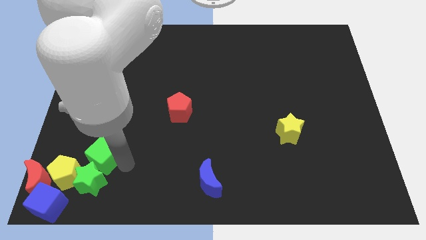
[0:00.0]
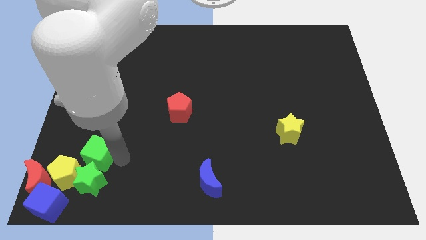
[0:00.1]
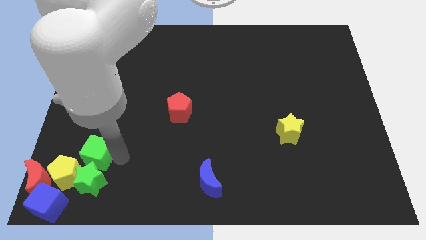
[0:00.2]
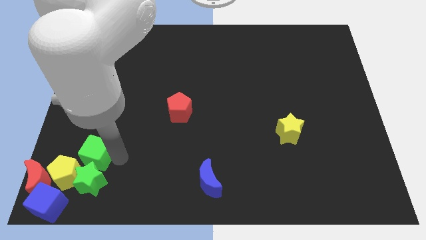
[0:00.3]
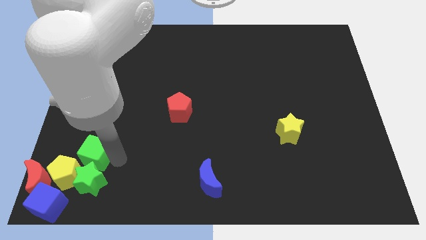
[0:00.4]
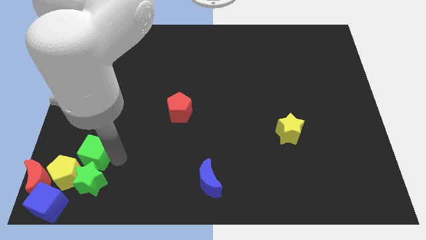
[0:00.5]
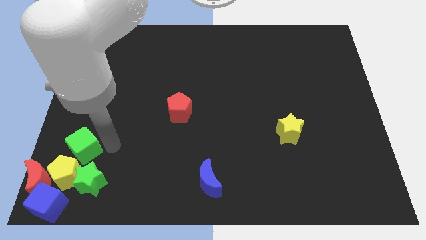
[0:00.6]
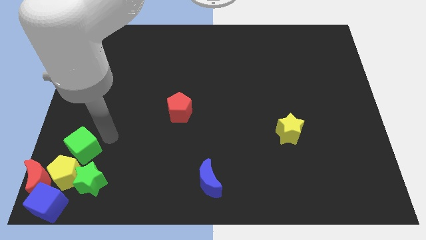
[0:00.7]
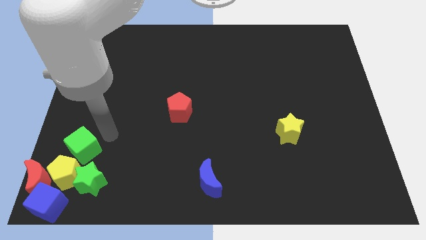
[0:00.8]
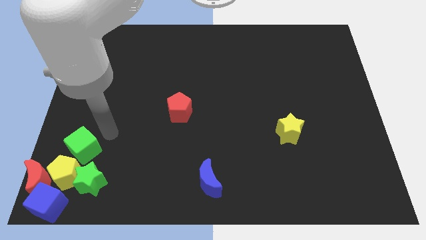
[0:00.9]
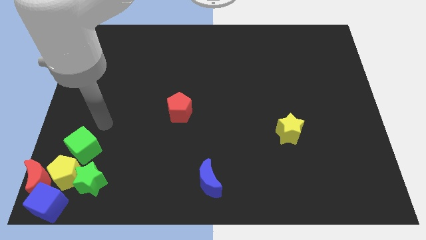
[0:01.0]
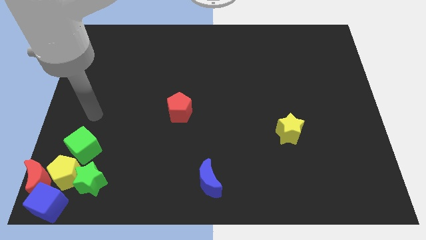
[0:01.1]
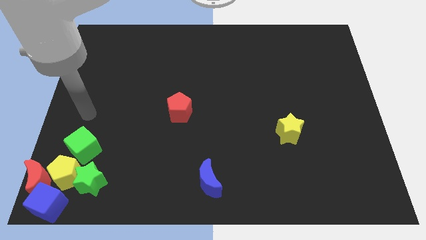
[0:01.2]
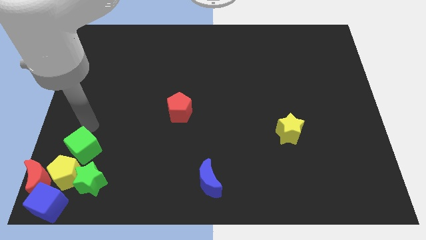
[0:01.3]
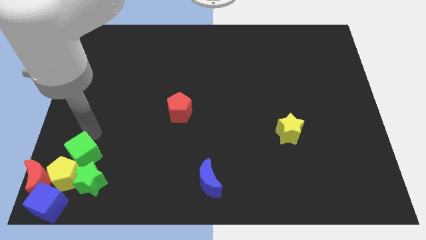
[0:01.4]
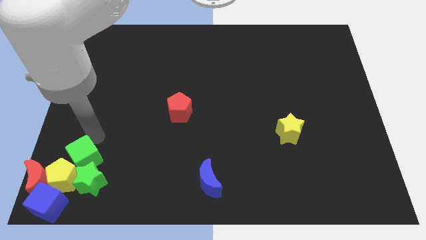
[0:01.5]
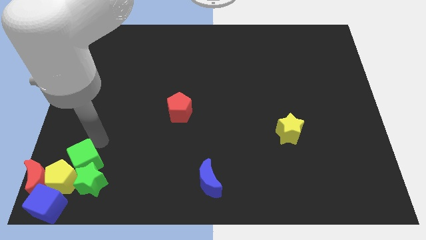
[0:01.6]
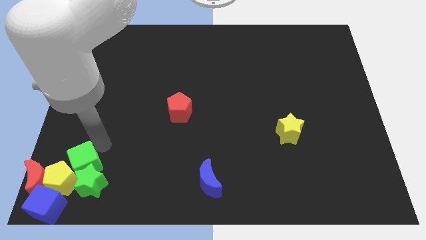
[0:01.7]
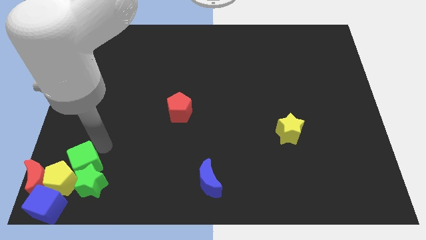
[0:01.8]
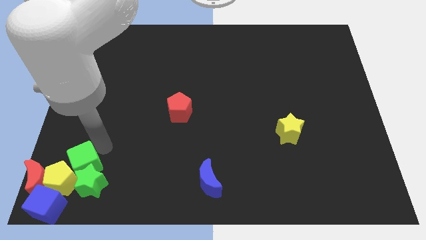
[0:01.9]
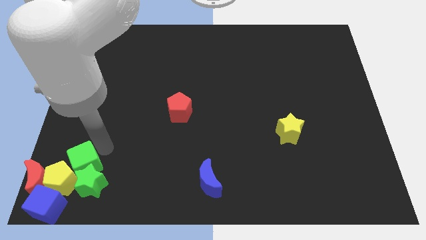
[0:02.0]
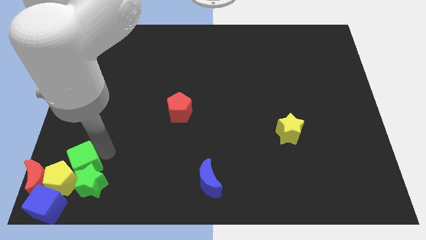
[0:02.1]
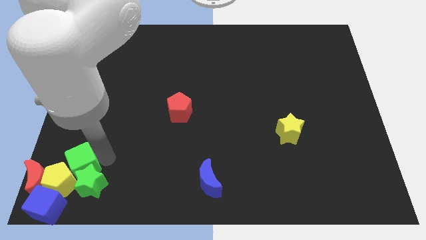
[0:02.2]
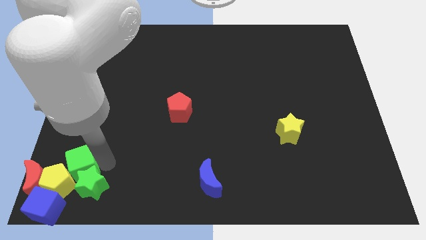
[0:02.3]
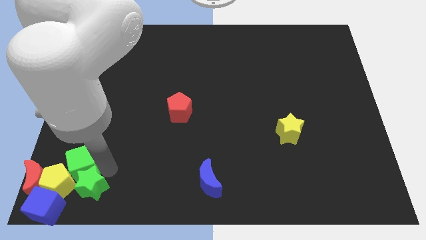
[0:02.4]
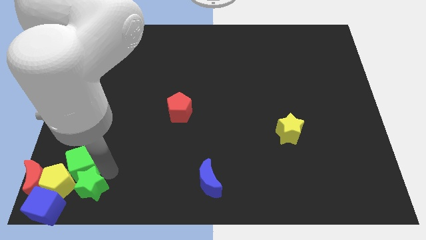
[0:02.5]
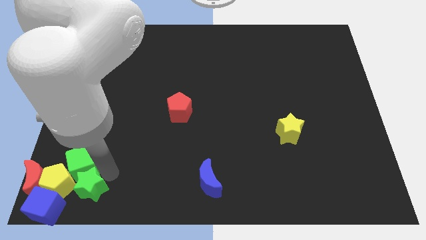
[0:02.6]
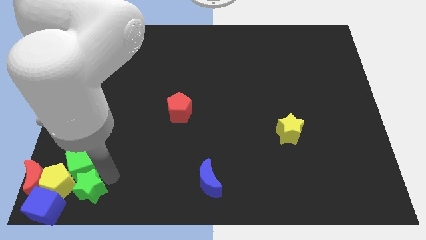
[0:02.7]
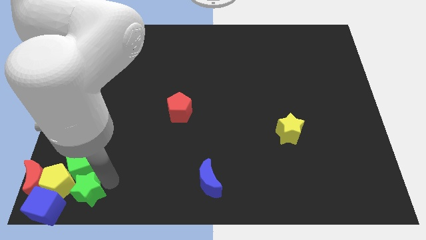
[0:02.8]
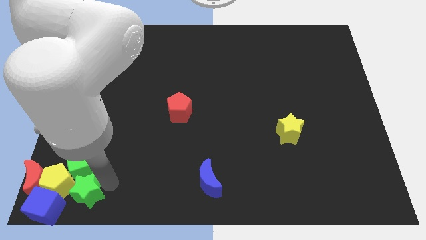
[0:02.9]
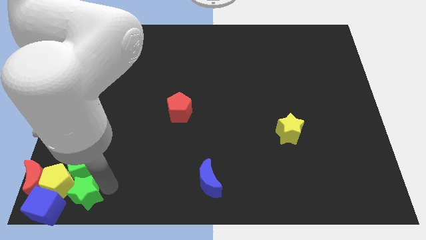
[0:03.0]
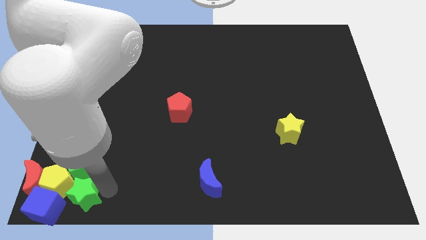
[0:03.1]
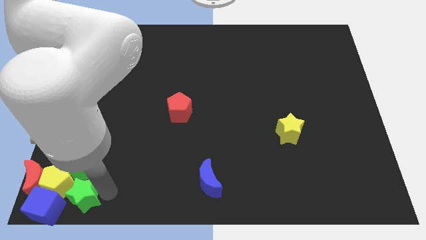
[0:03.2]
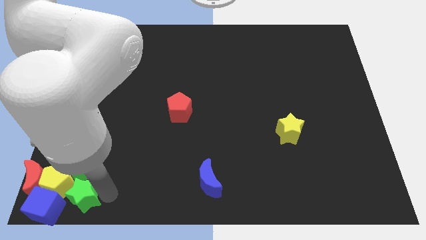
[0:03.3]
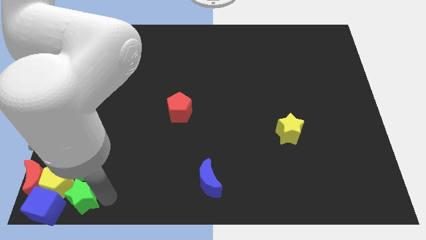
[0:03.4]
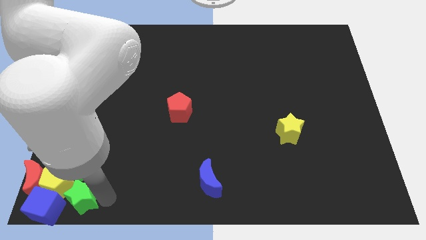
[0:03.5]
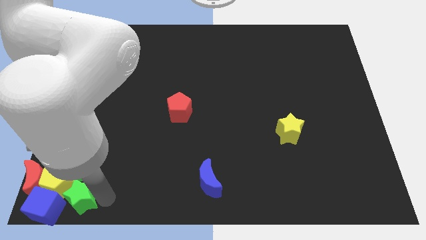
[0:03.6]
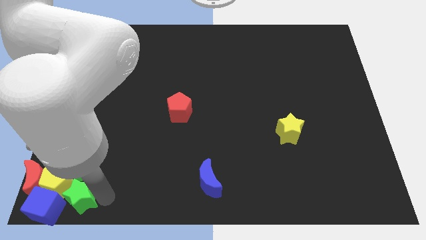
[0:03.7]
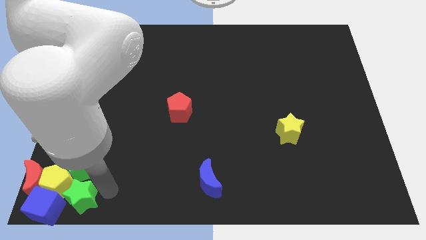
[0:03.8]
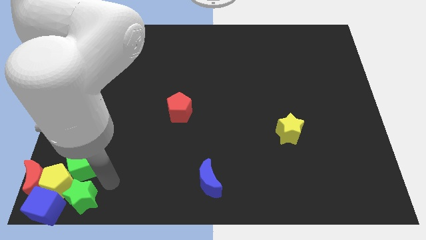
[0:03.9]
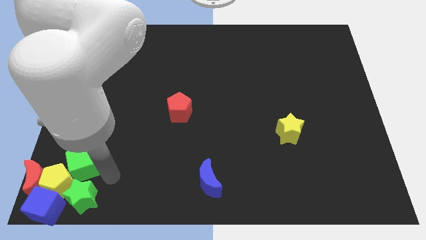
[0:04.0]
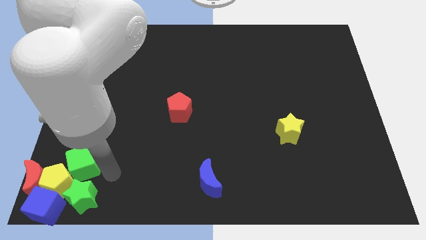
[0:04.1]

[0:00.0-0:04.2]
move the green blocks to the right of the yellow pentagon

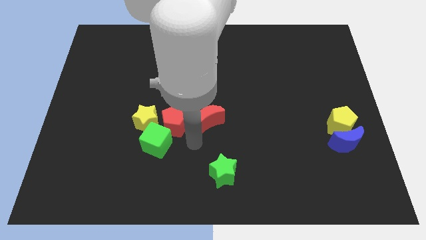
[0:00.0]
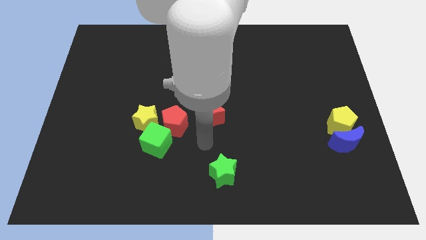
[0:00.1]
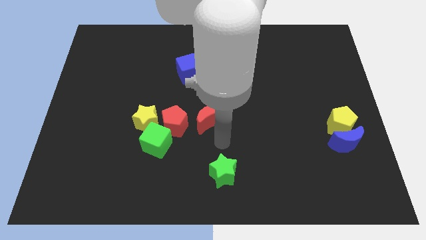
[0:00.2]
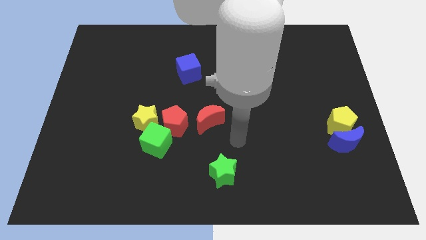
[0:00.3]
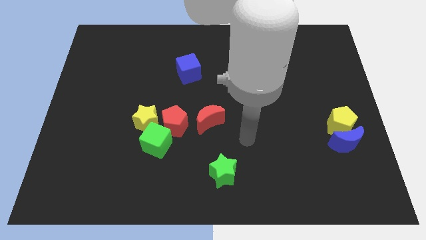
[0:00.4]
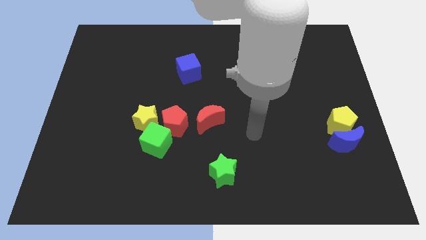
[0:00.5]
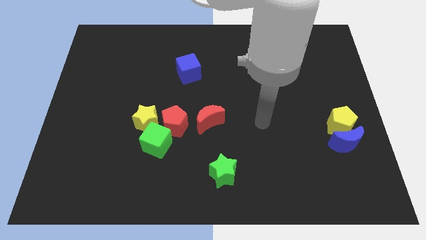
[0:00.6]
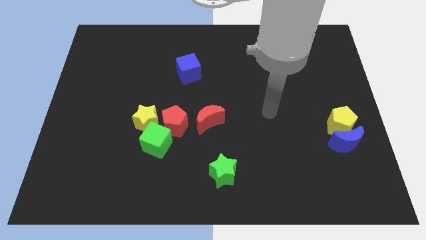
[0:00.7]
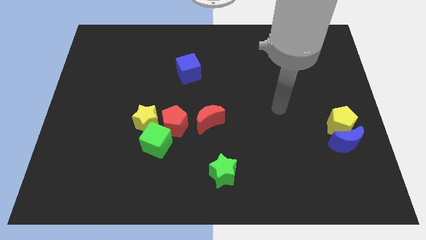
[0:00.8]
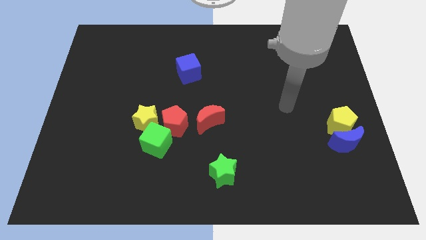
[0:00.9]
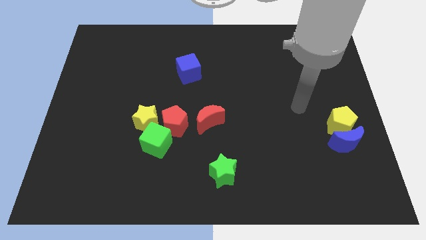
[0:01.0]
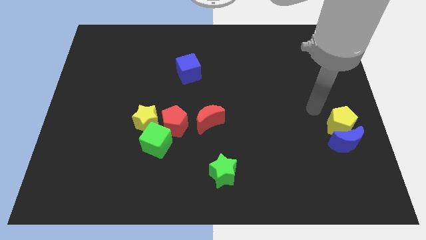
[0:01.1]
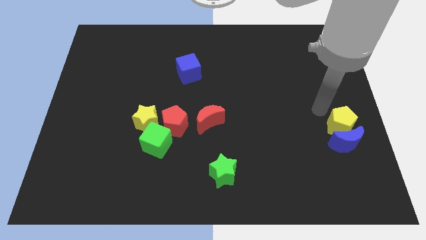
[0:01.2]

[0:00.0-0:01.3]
move arm towards yellow pentagon

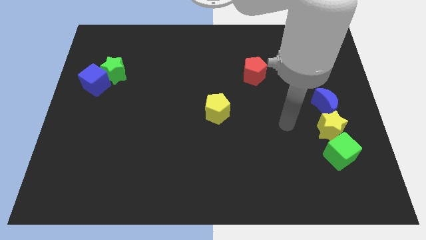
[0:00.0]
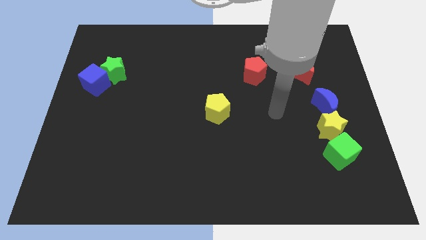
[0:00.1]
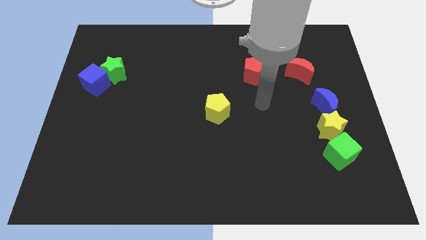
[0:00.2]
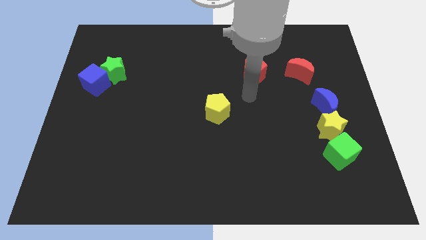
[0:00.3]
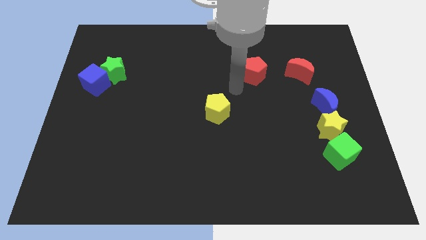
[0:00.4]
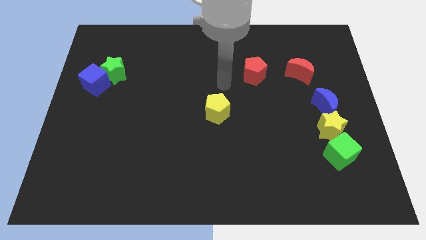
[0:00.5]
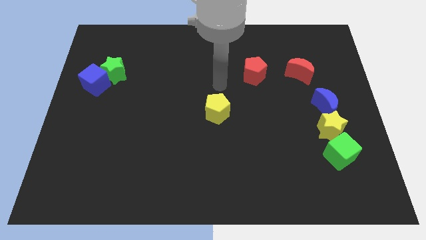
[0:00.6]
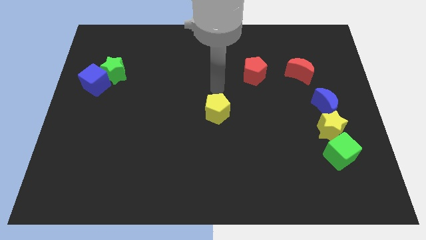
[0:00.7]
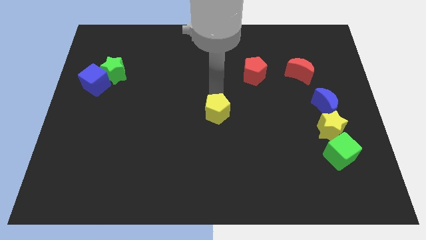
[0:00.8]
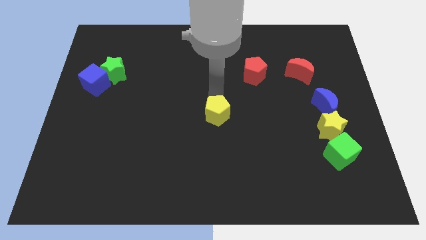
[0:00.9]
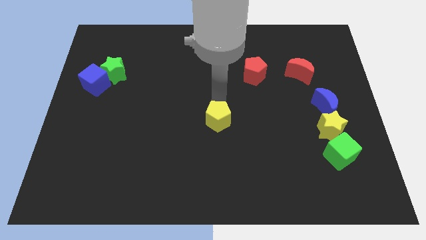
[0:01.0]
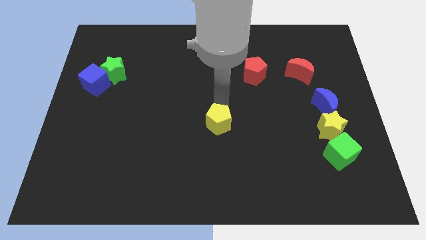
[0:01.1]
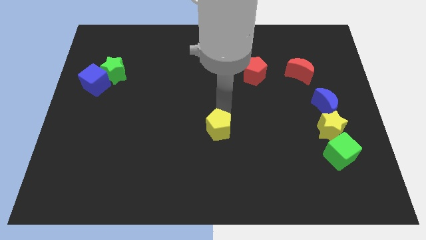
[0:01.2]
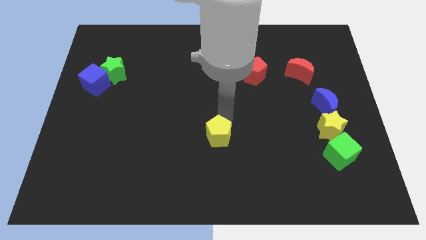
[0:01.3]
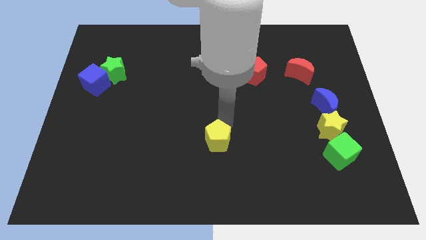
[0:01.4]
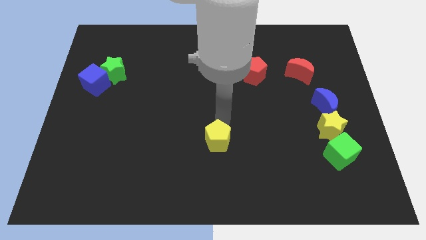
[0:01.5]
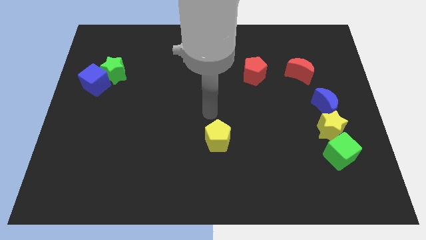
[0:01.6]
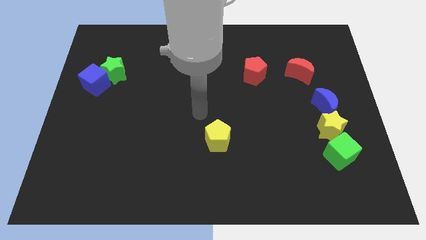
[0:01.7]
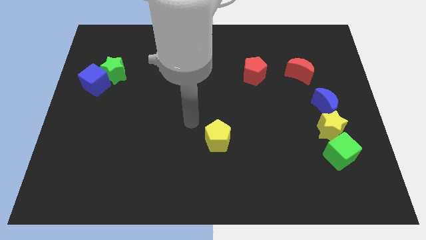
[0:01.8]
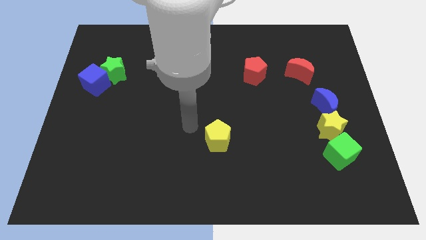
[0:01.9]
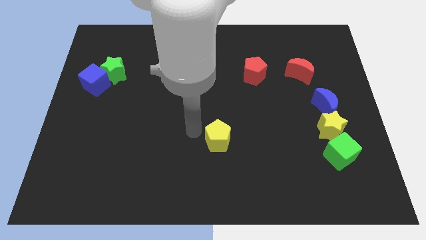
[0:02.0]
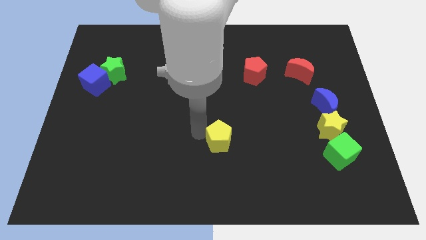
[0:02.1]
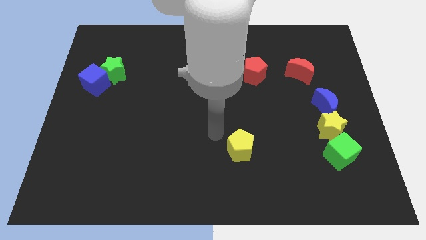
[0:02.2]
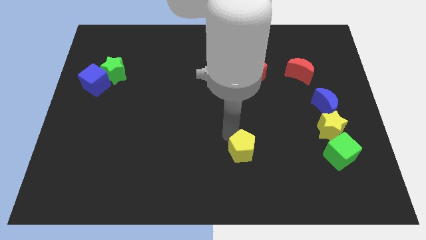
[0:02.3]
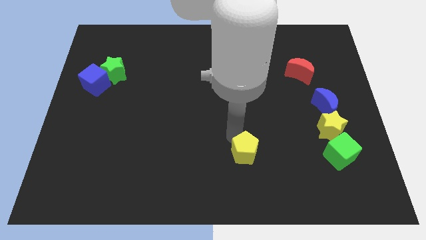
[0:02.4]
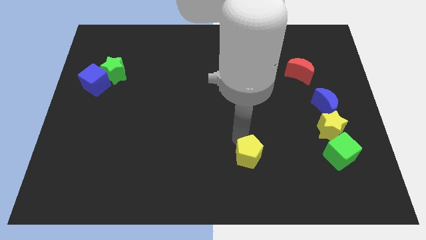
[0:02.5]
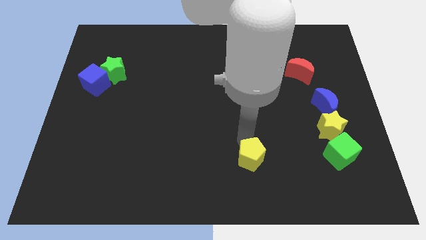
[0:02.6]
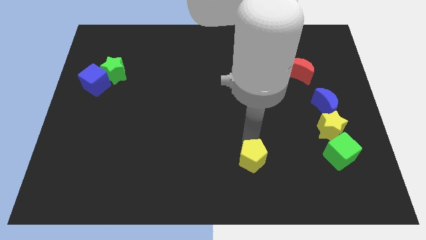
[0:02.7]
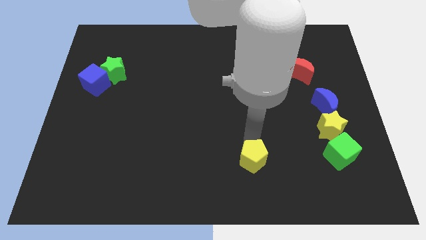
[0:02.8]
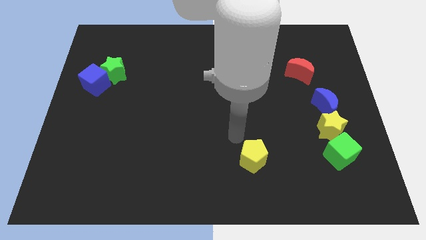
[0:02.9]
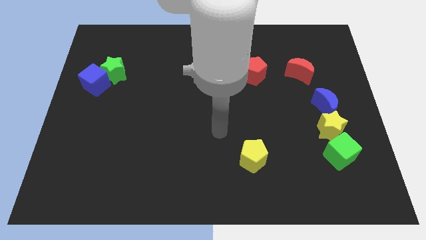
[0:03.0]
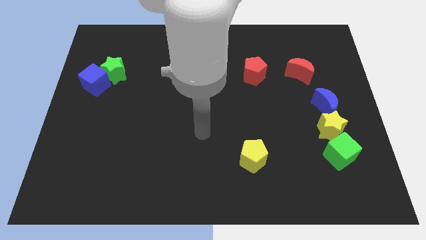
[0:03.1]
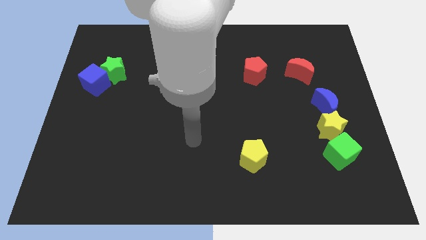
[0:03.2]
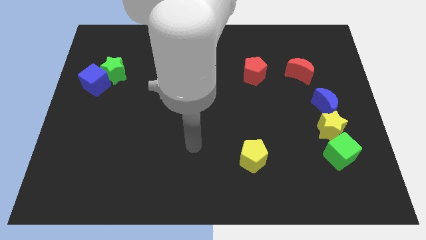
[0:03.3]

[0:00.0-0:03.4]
move the yellow pentagon horizontal to the green cube

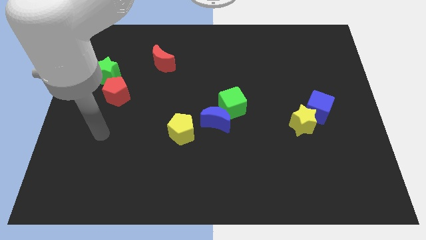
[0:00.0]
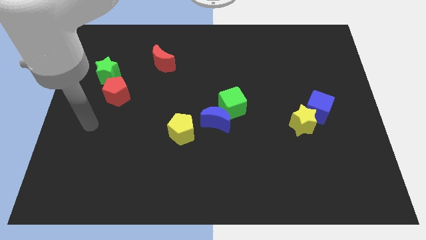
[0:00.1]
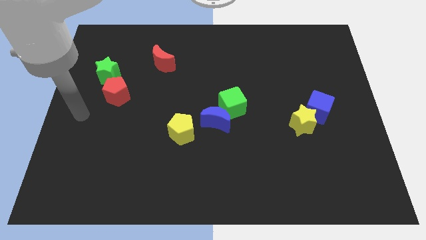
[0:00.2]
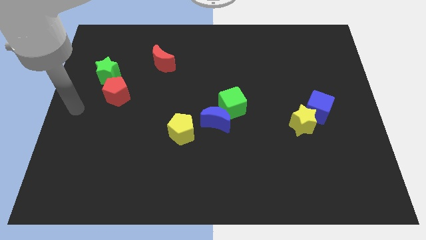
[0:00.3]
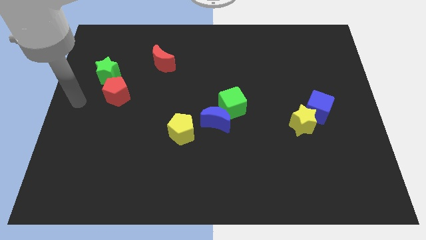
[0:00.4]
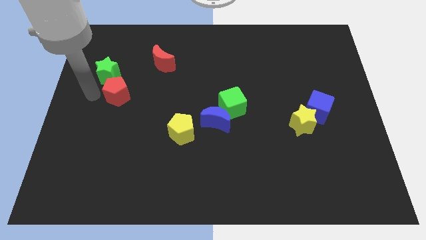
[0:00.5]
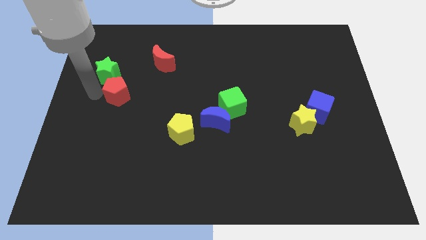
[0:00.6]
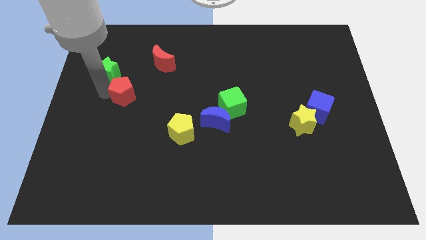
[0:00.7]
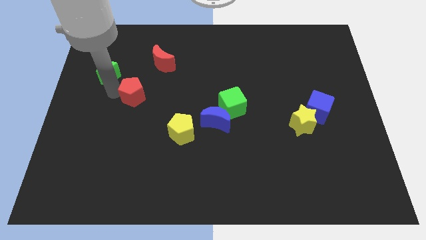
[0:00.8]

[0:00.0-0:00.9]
move the arm towards the red pentagon
